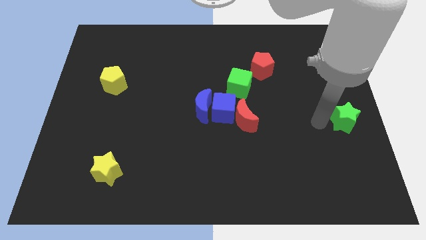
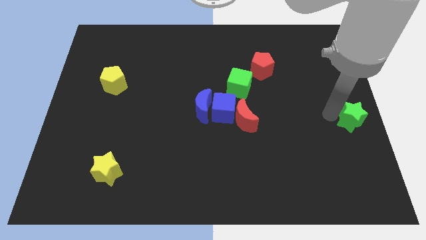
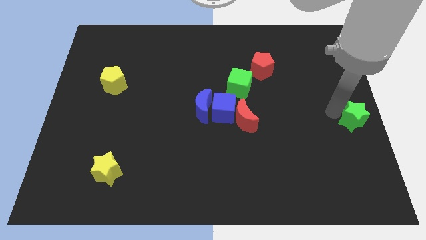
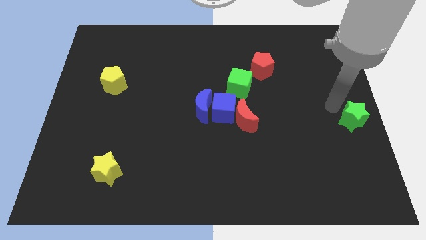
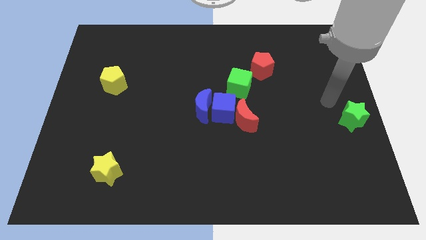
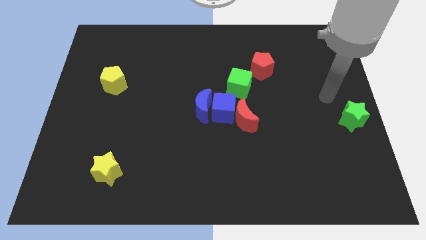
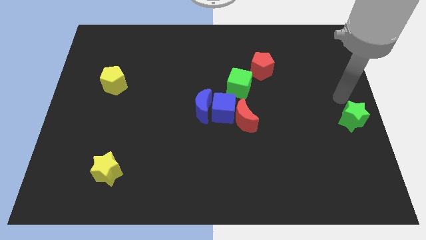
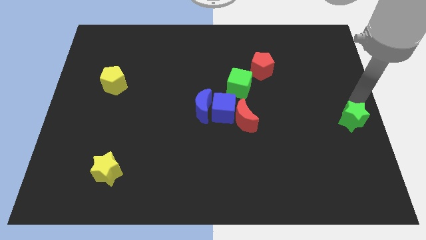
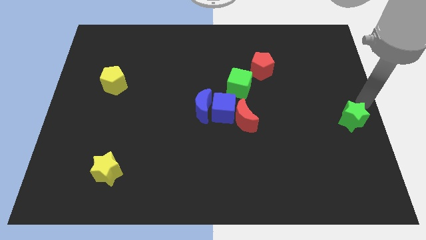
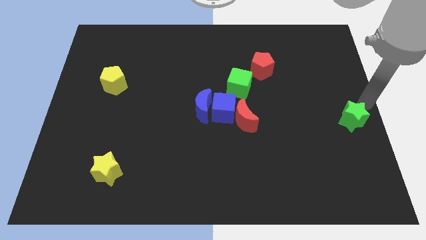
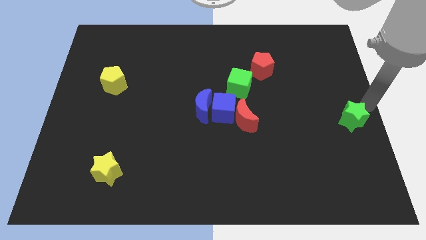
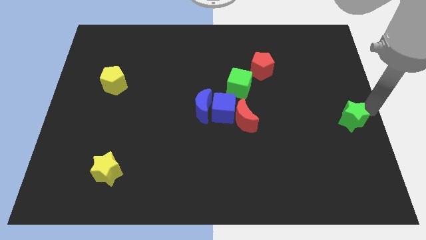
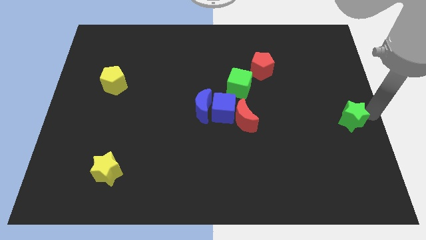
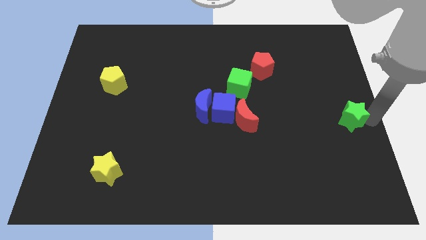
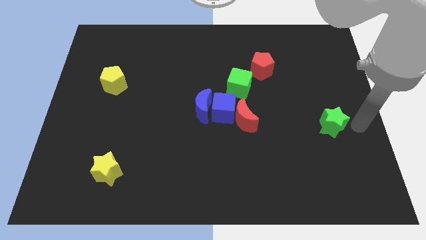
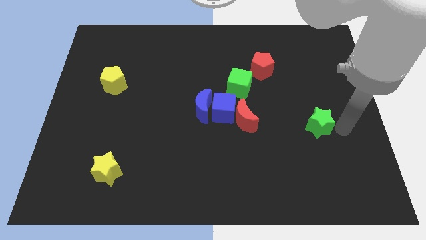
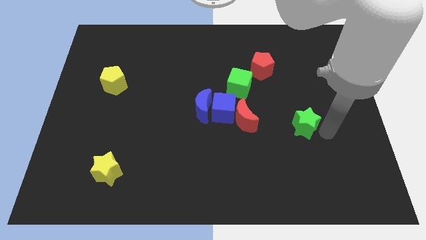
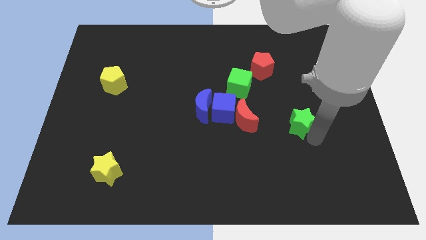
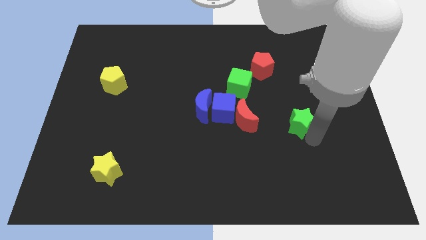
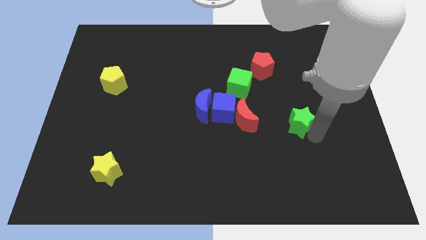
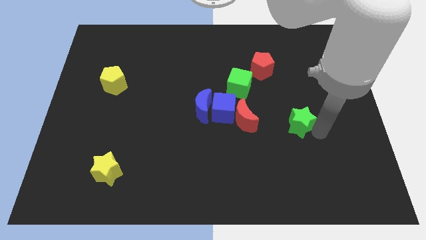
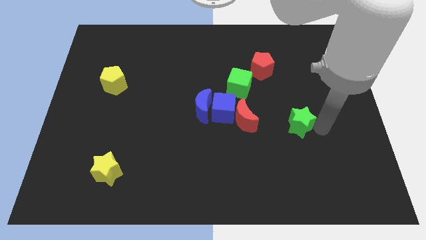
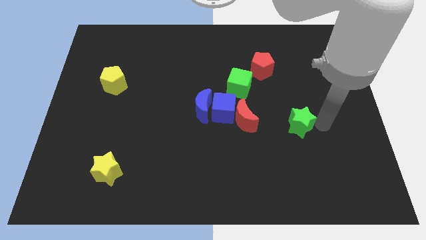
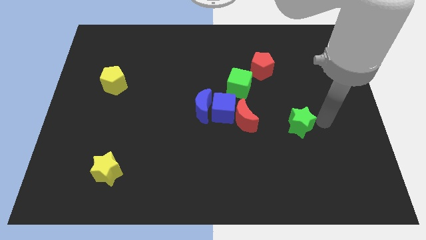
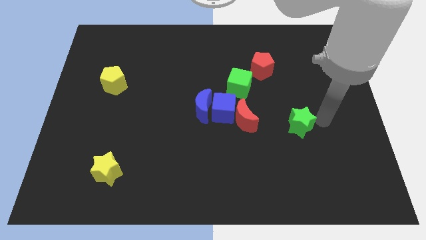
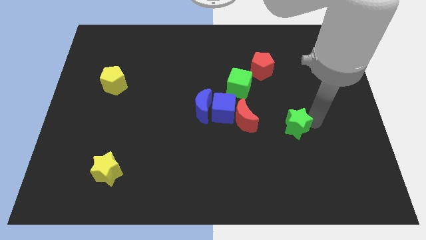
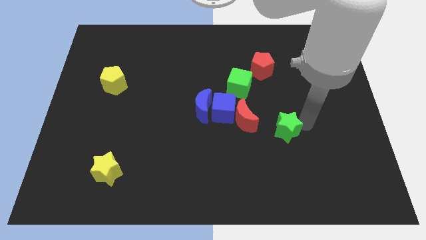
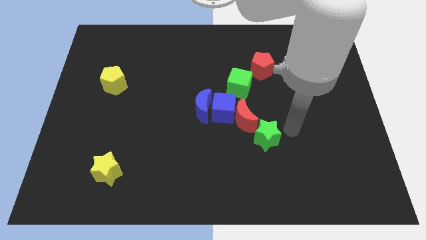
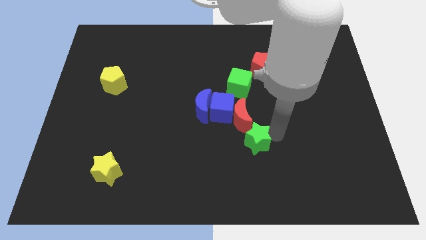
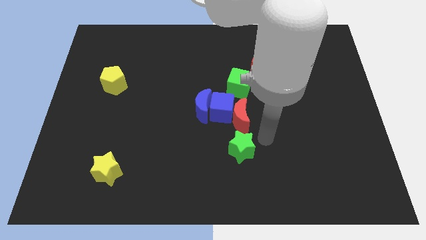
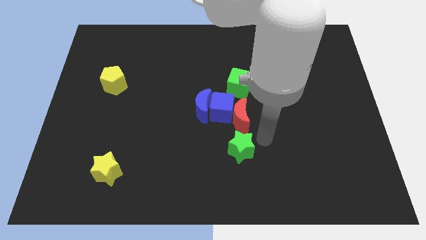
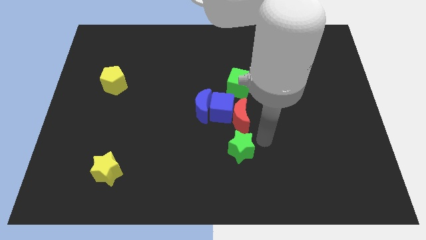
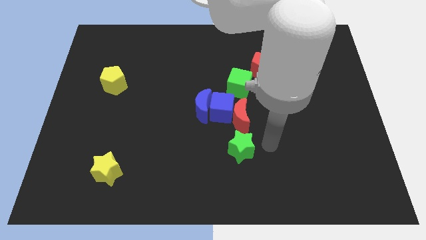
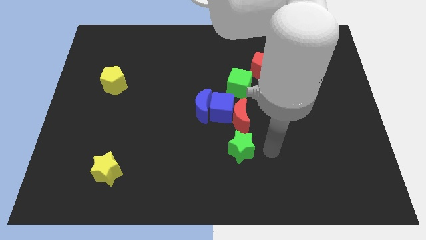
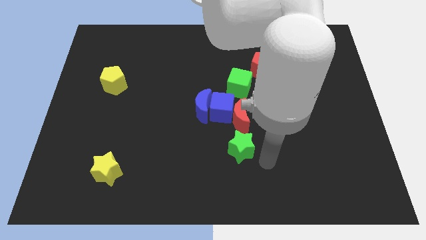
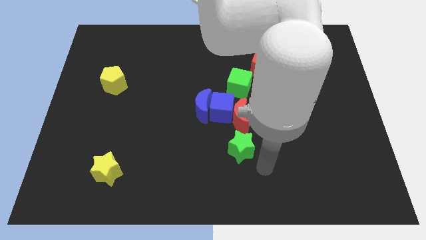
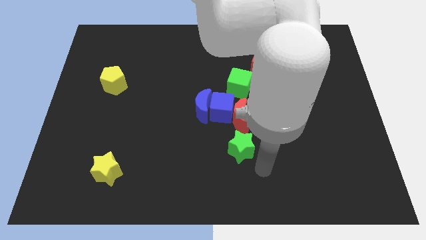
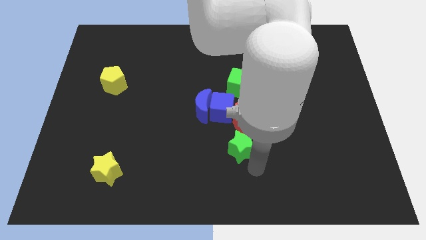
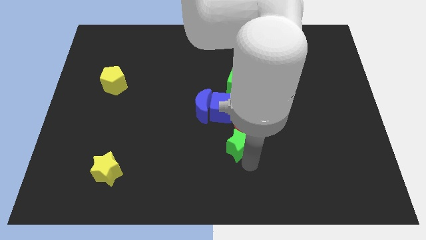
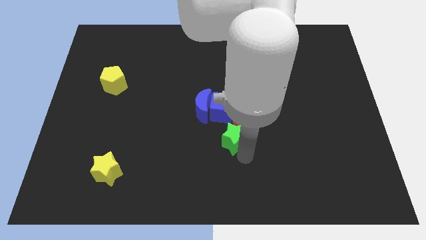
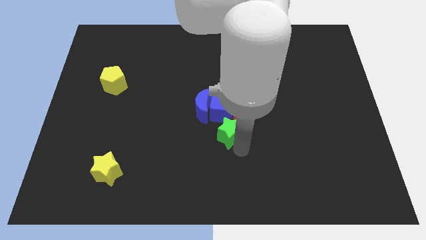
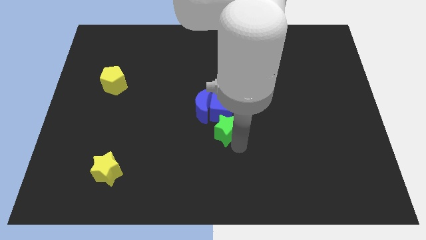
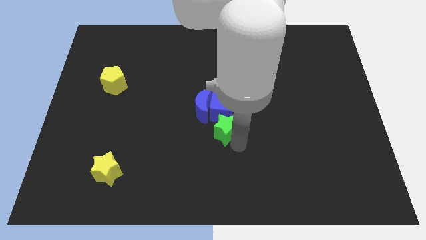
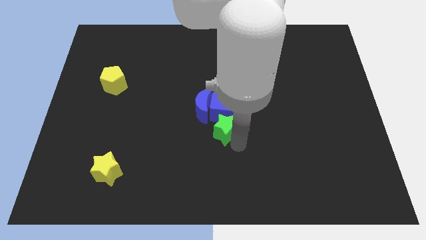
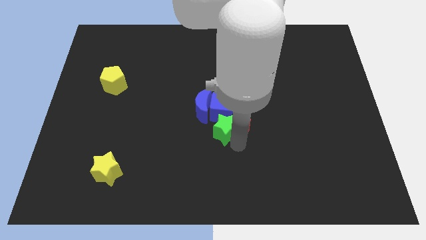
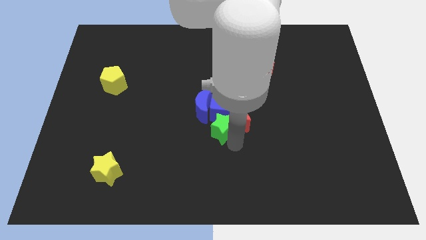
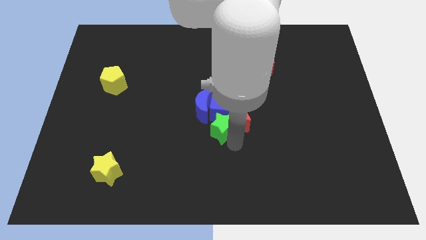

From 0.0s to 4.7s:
place the green star below the blue cube

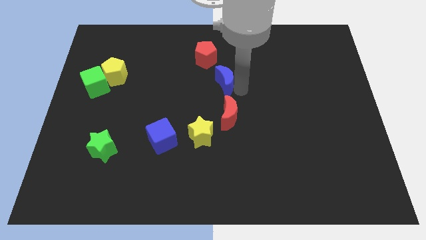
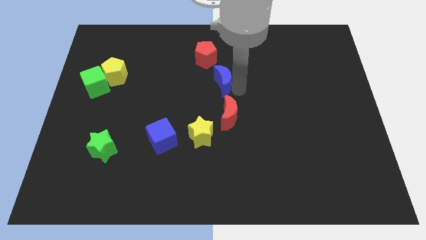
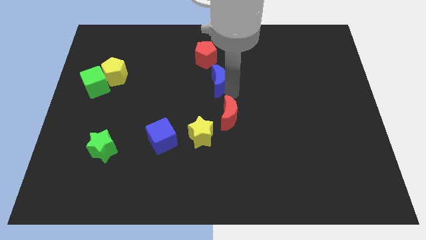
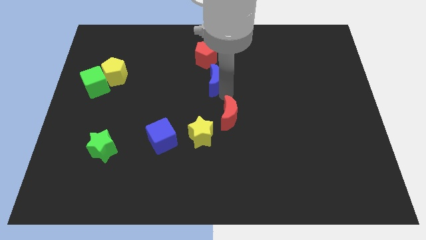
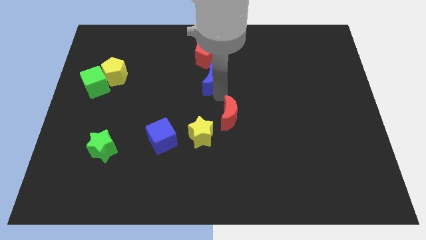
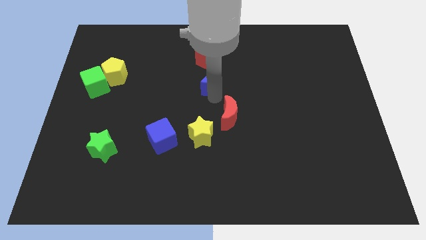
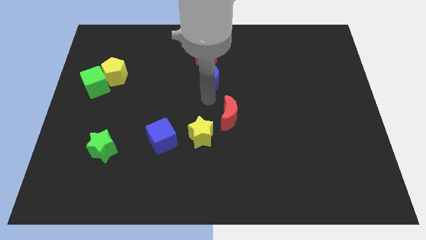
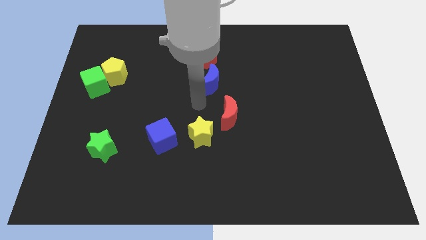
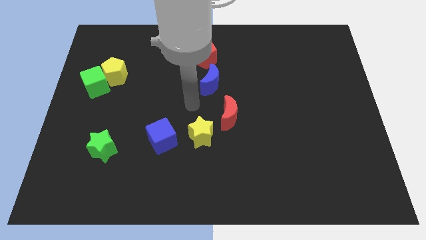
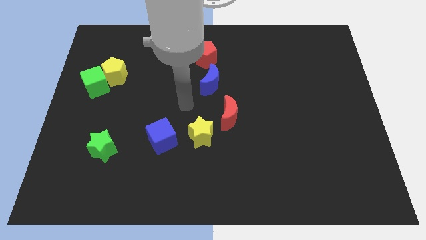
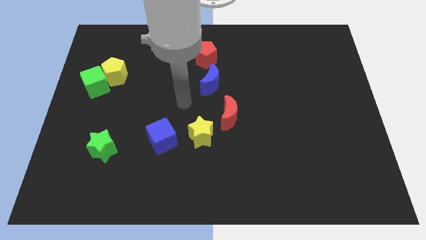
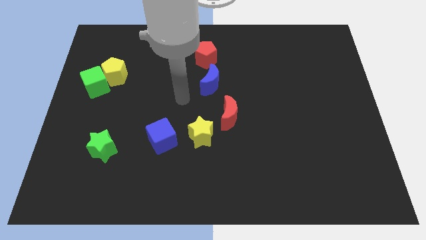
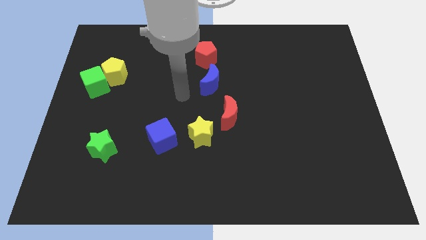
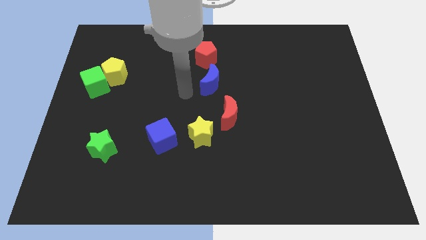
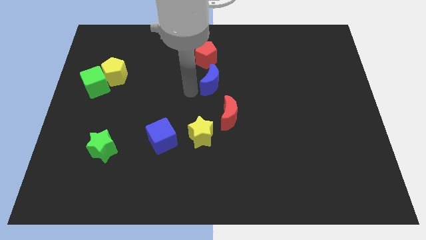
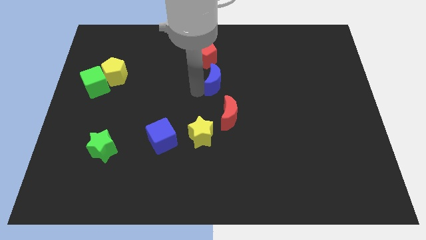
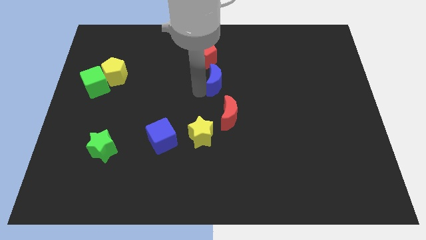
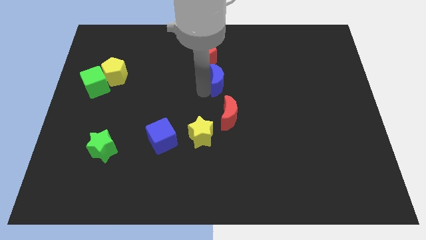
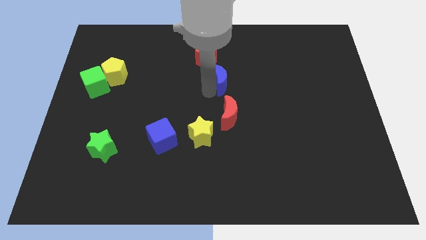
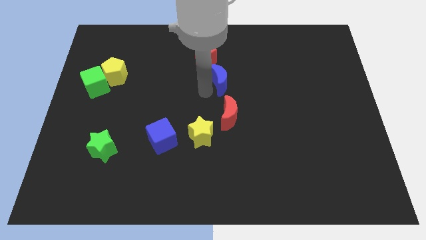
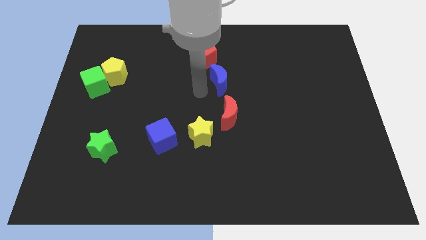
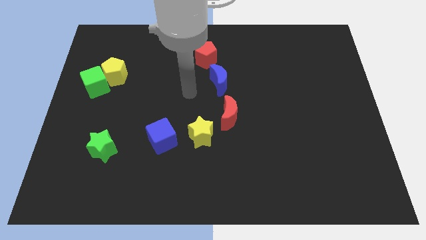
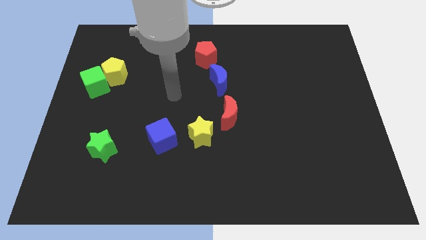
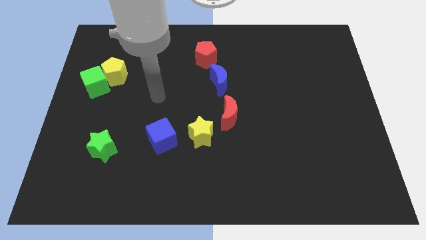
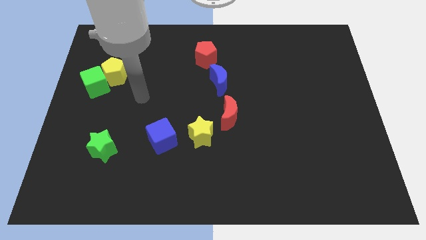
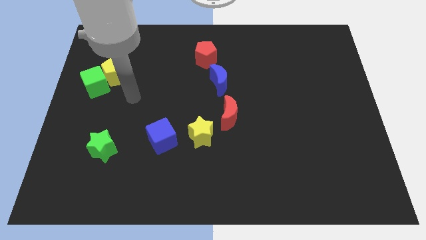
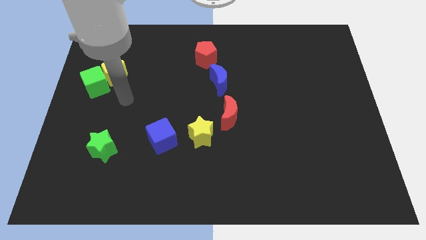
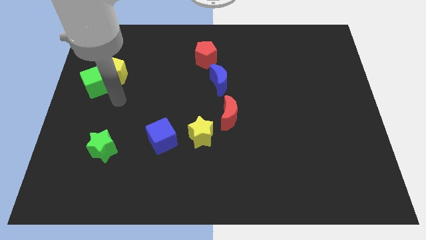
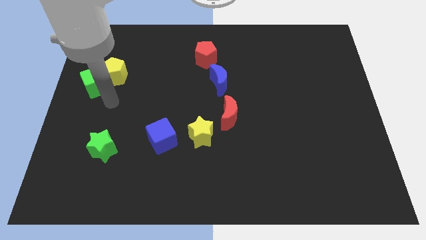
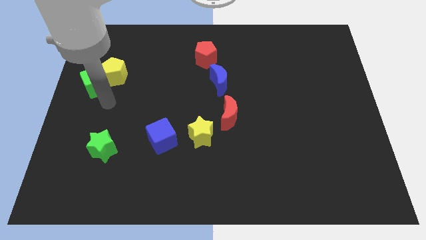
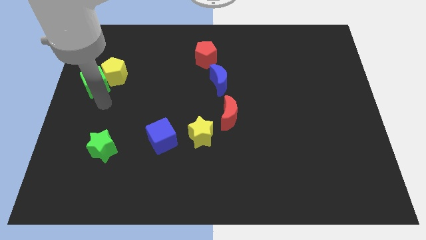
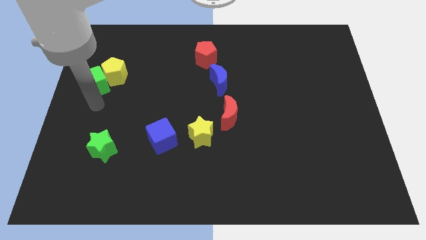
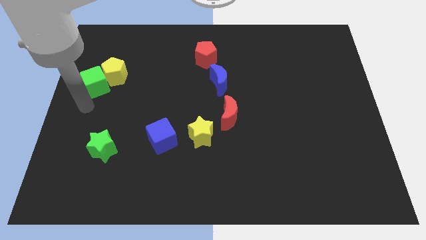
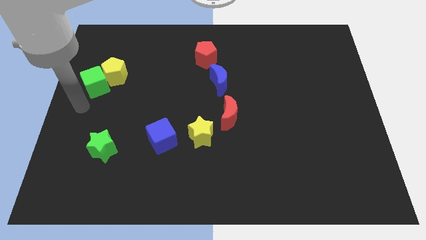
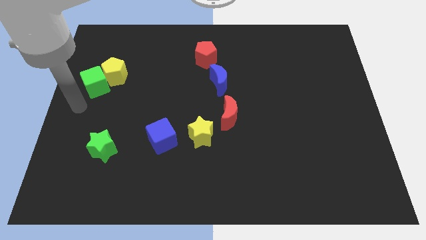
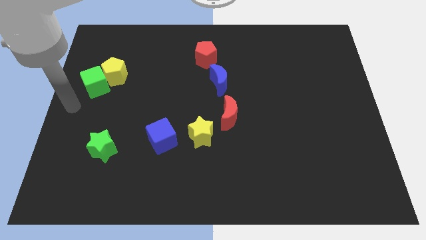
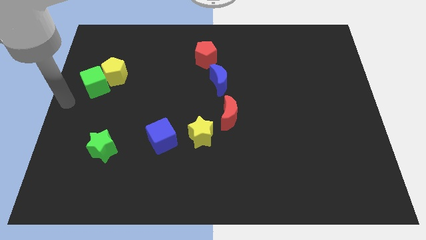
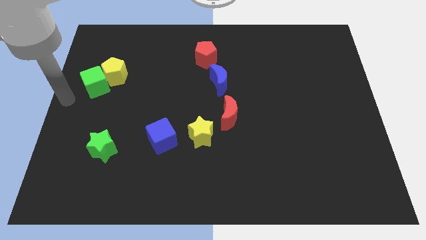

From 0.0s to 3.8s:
move arm to the green cube

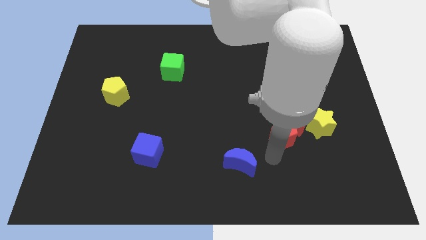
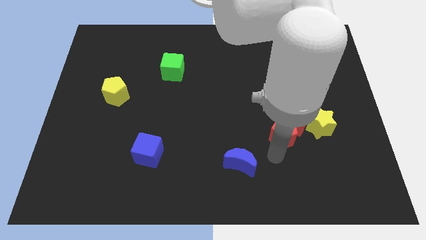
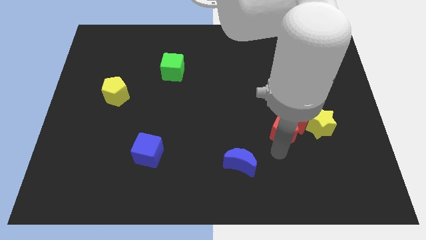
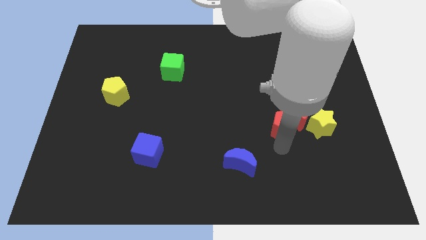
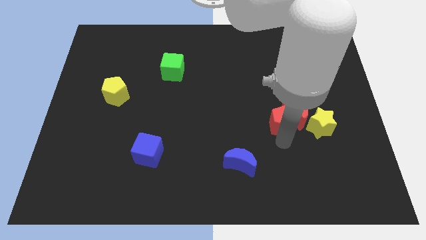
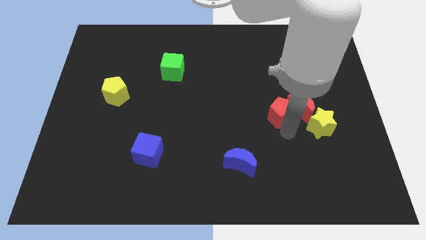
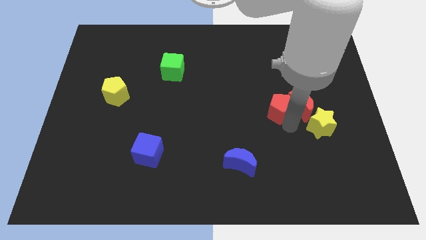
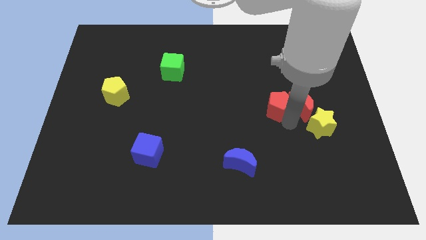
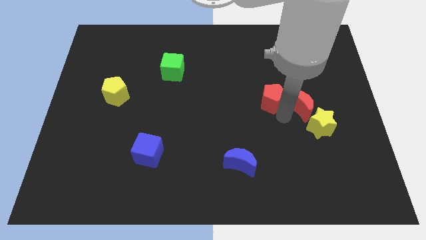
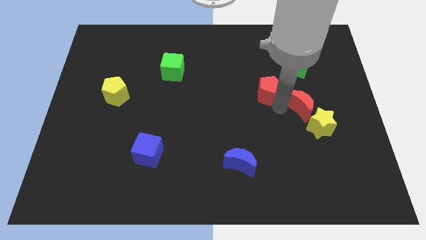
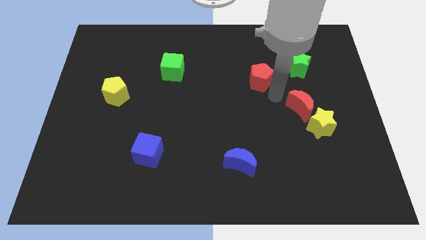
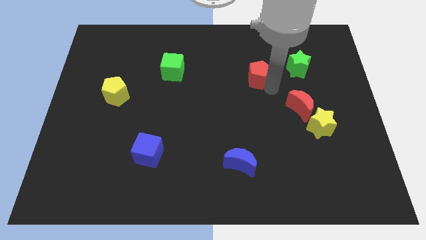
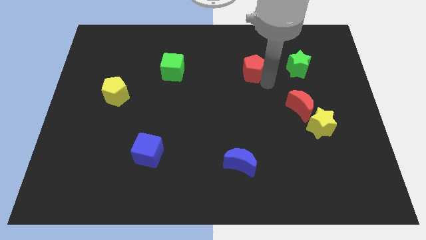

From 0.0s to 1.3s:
separate the red pentagon from the red crescent
